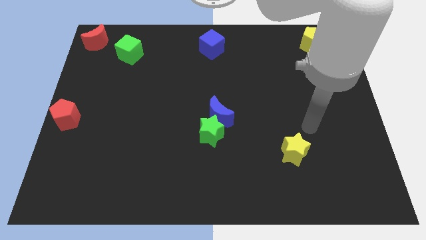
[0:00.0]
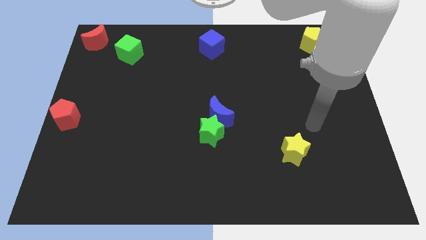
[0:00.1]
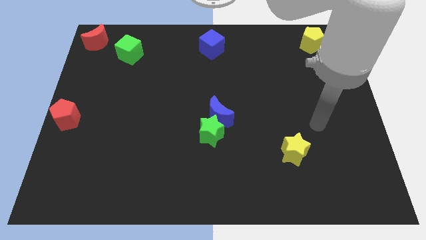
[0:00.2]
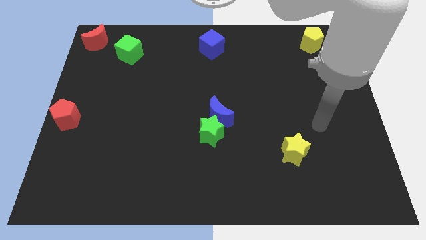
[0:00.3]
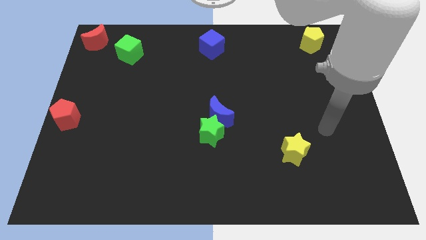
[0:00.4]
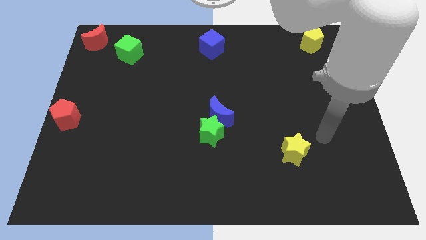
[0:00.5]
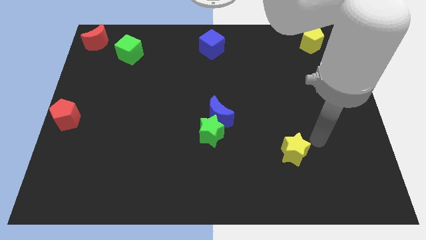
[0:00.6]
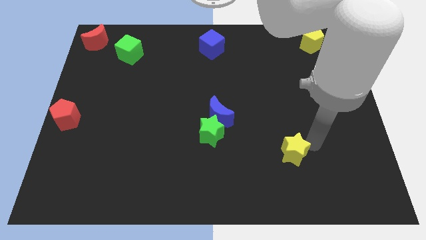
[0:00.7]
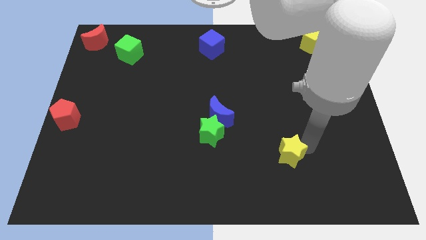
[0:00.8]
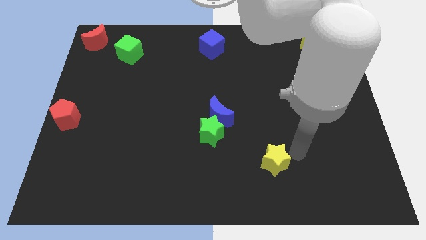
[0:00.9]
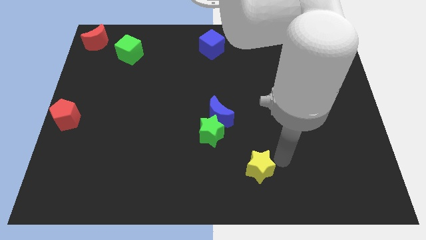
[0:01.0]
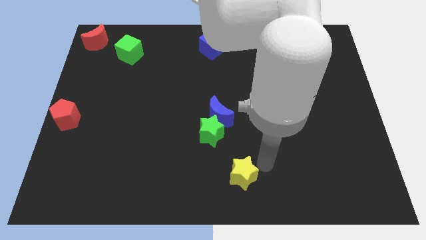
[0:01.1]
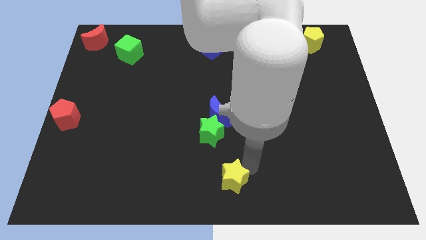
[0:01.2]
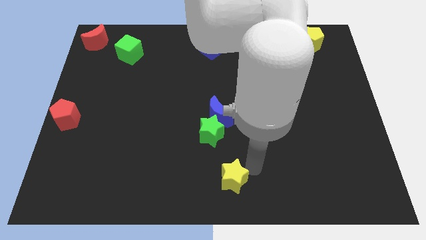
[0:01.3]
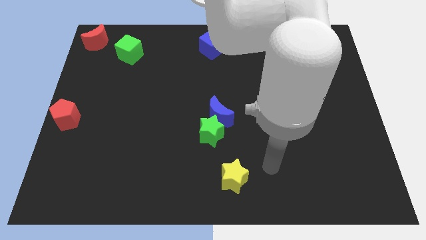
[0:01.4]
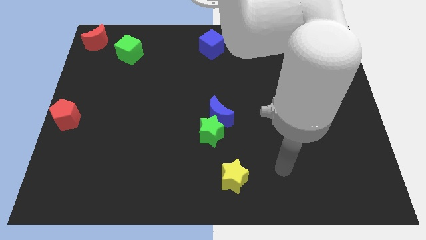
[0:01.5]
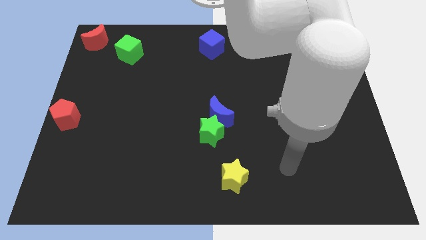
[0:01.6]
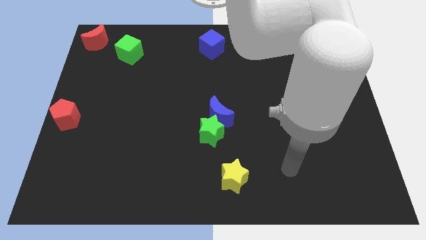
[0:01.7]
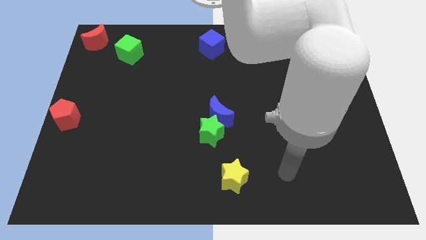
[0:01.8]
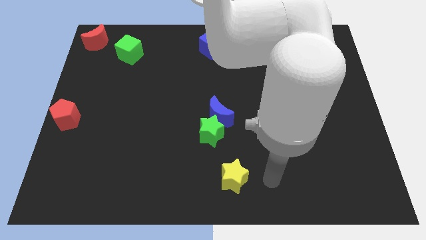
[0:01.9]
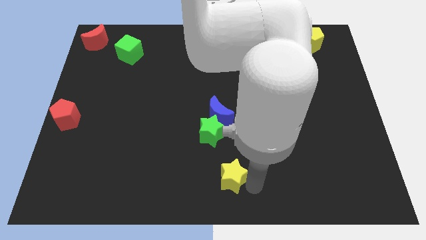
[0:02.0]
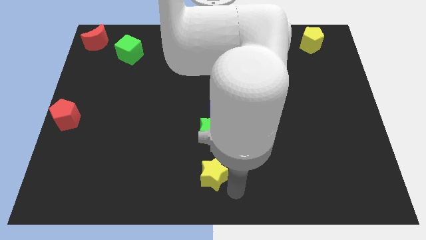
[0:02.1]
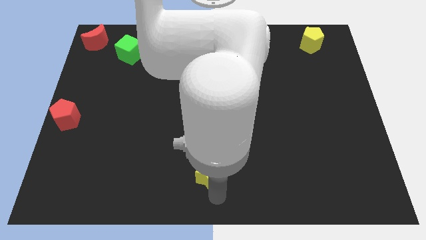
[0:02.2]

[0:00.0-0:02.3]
push the yellow star at the bottom of the green star

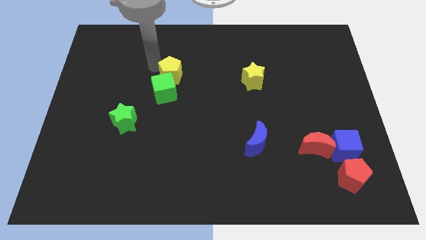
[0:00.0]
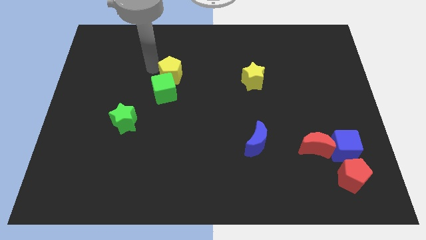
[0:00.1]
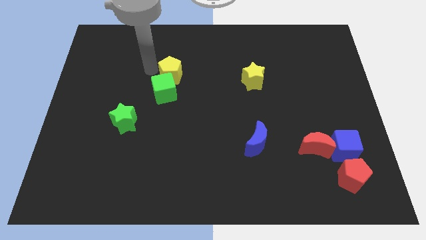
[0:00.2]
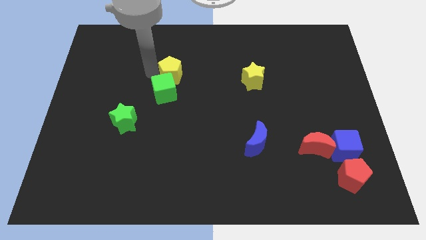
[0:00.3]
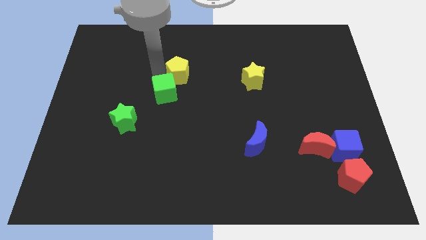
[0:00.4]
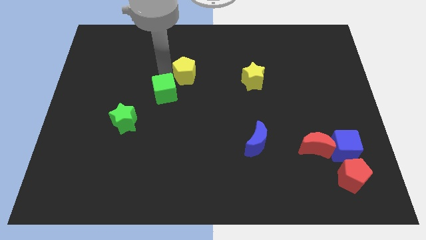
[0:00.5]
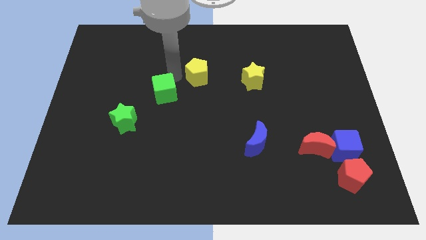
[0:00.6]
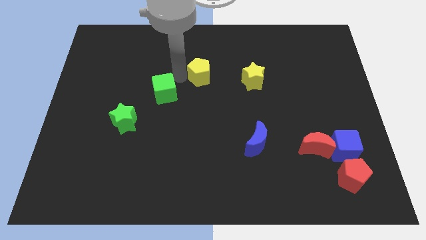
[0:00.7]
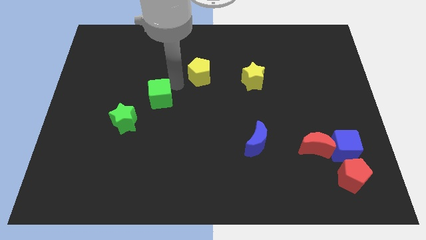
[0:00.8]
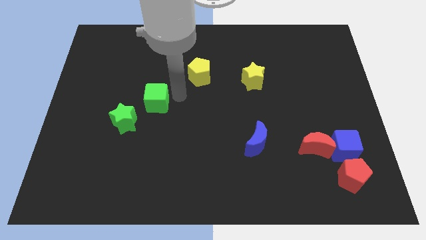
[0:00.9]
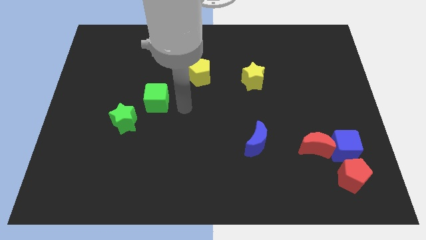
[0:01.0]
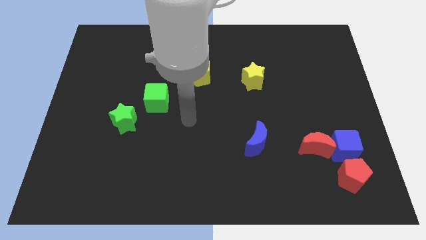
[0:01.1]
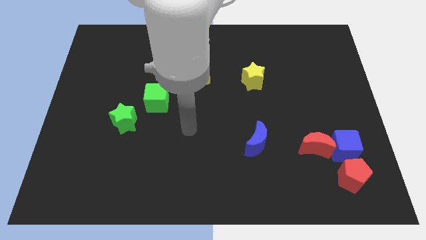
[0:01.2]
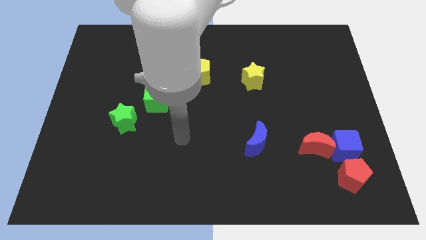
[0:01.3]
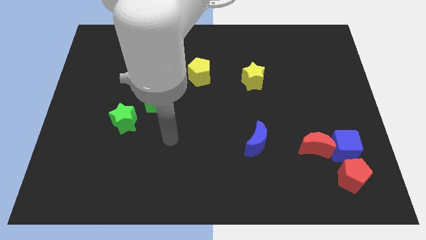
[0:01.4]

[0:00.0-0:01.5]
separate the green cube and yellow pentagon

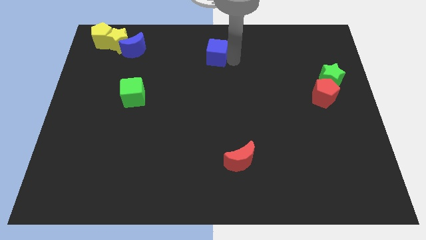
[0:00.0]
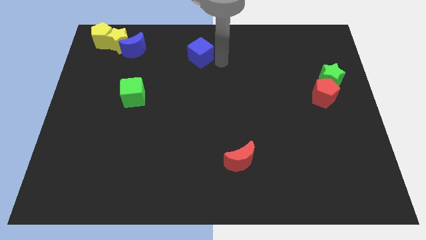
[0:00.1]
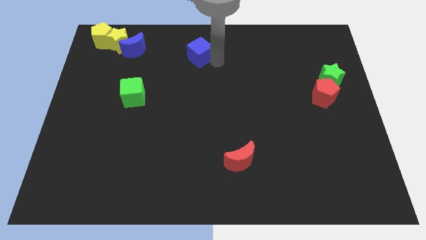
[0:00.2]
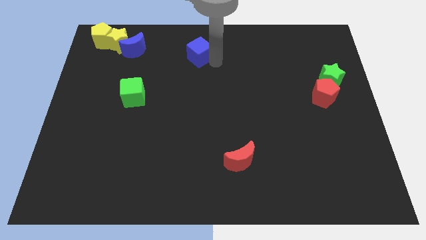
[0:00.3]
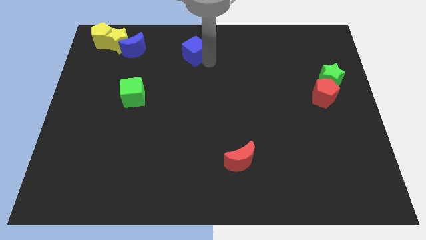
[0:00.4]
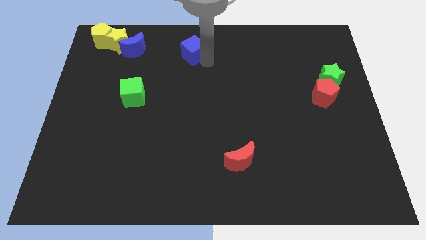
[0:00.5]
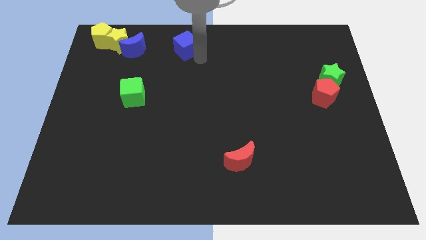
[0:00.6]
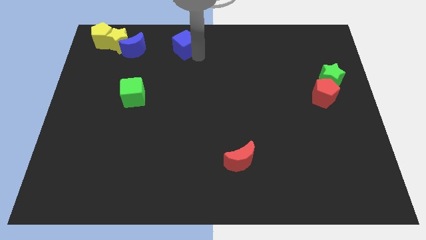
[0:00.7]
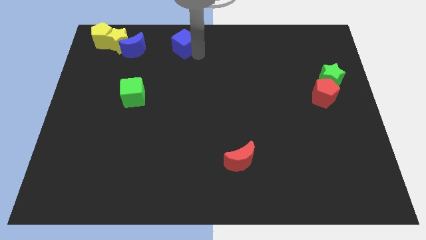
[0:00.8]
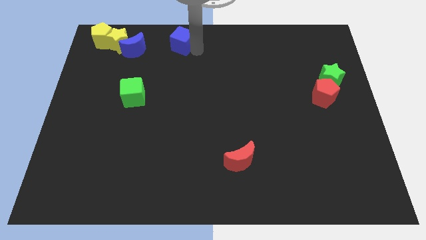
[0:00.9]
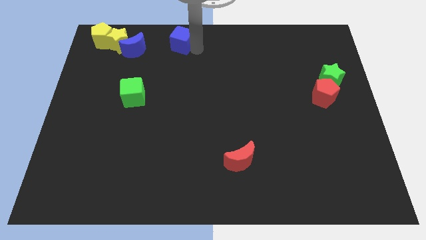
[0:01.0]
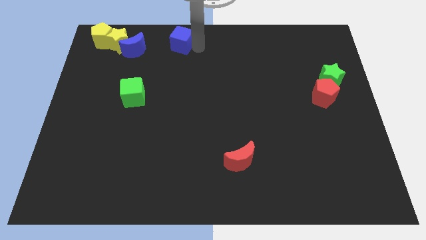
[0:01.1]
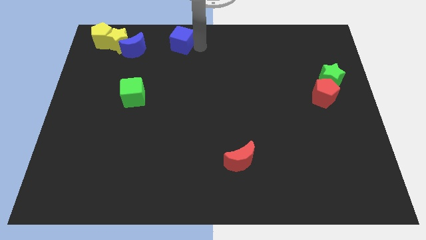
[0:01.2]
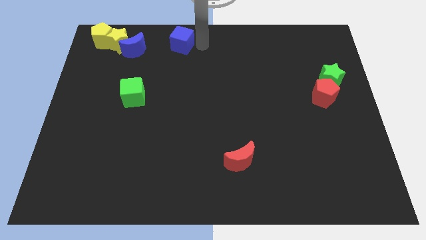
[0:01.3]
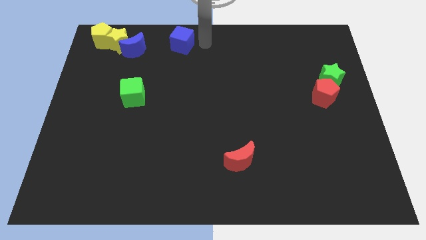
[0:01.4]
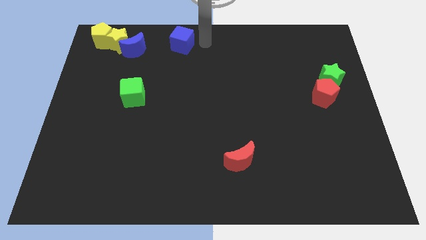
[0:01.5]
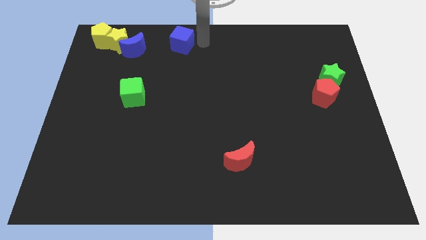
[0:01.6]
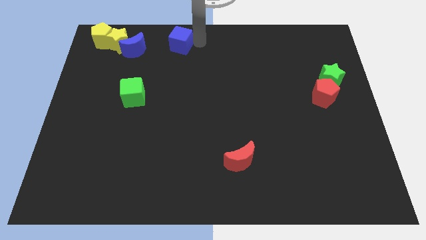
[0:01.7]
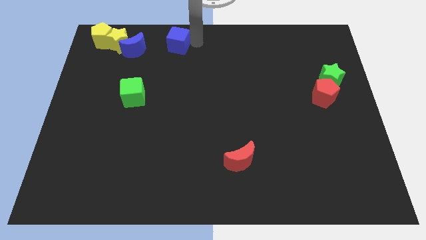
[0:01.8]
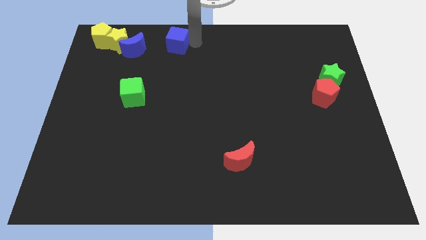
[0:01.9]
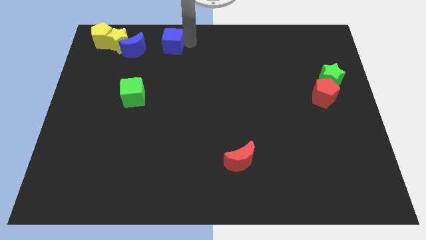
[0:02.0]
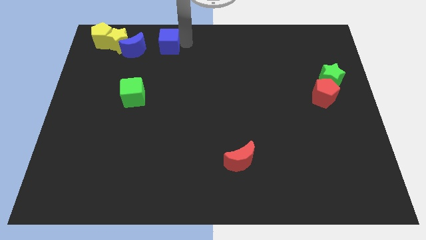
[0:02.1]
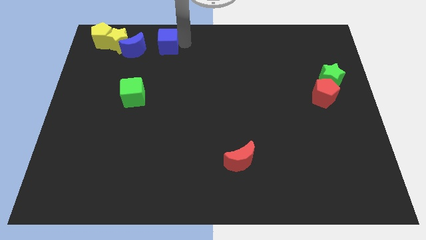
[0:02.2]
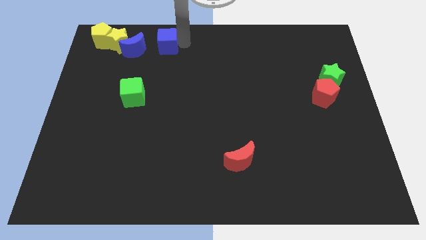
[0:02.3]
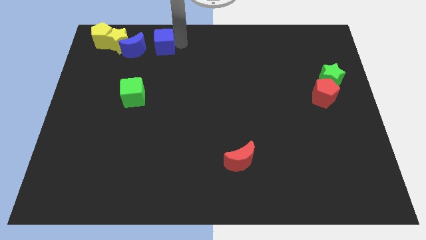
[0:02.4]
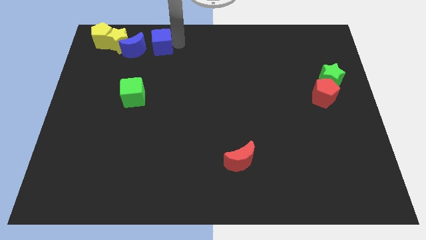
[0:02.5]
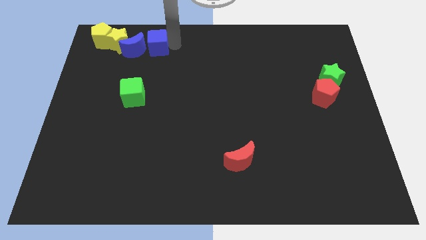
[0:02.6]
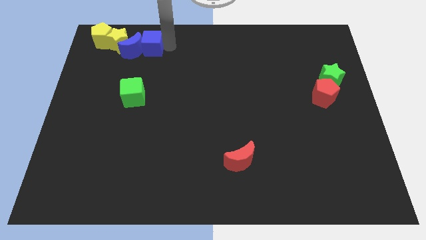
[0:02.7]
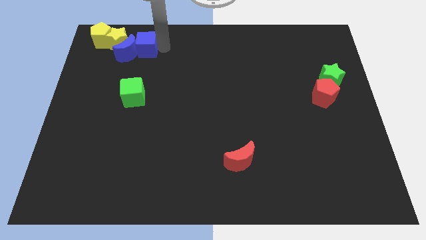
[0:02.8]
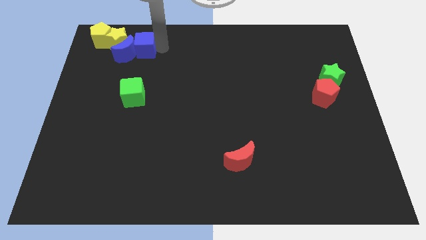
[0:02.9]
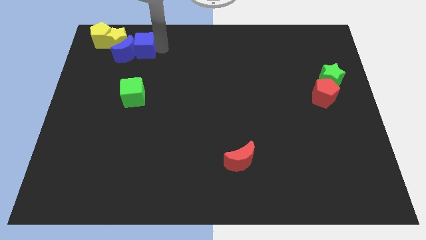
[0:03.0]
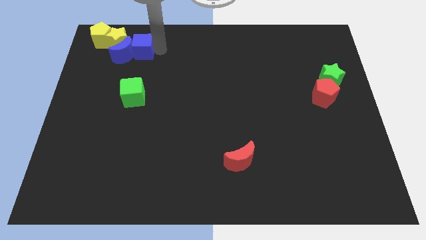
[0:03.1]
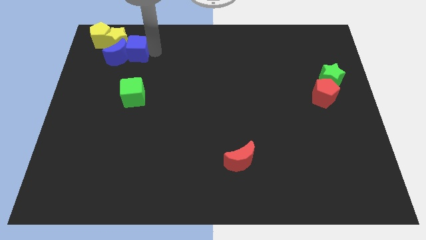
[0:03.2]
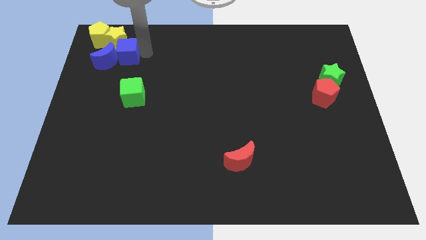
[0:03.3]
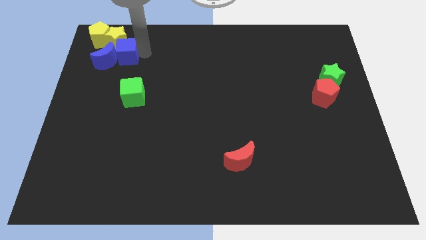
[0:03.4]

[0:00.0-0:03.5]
place blue cube below yellow star

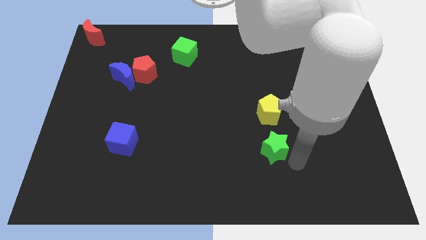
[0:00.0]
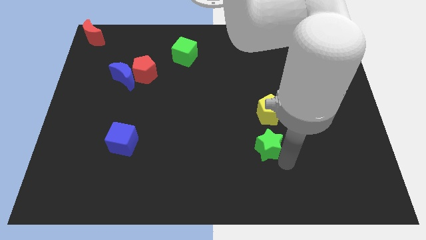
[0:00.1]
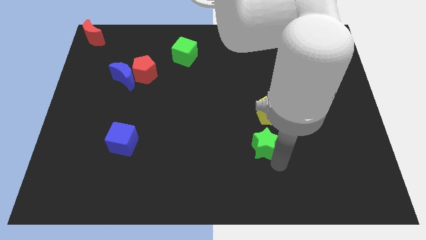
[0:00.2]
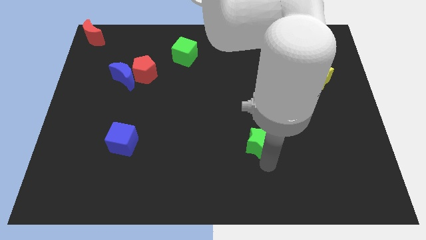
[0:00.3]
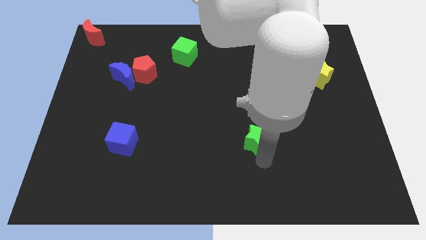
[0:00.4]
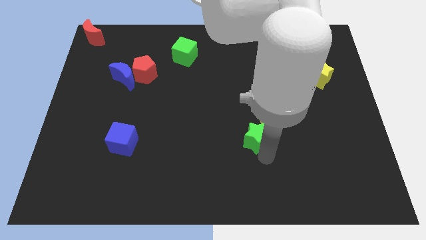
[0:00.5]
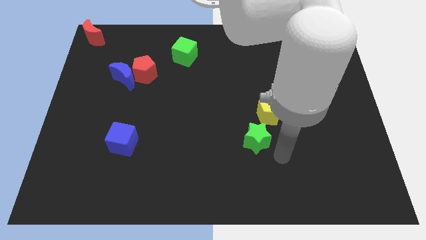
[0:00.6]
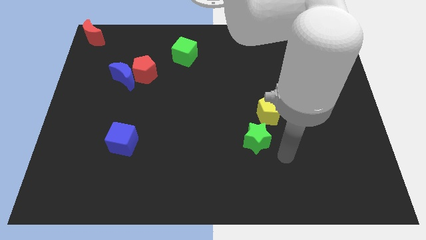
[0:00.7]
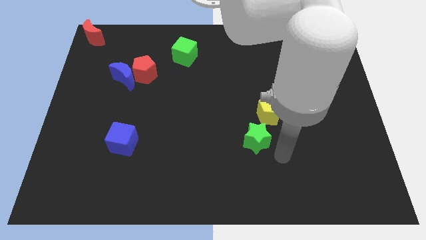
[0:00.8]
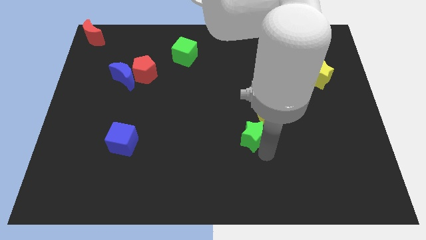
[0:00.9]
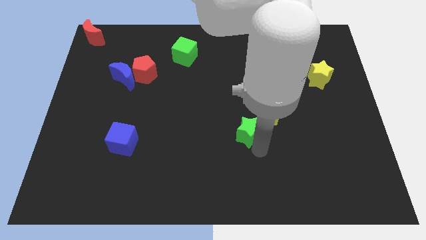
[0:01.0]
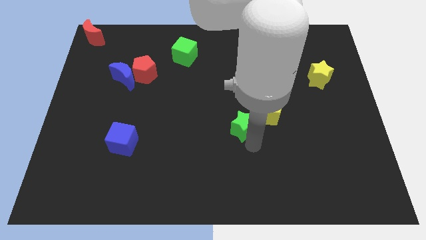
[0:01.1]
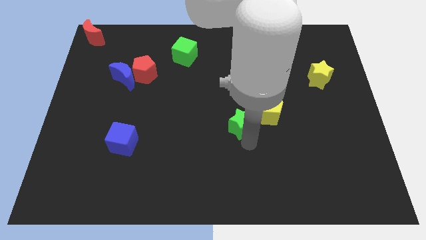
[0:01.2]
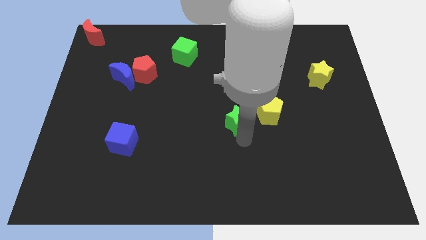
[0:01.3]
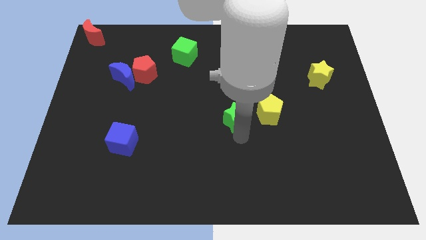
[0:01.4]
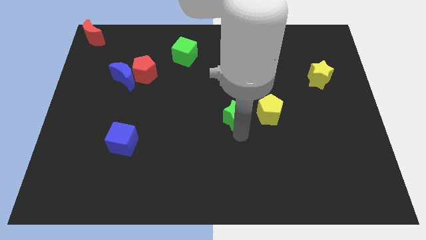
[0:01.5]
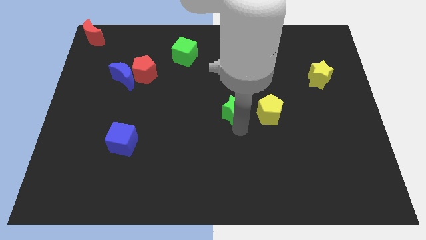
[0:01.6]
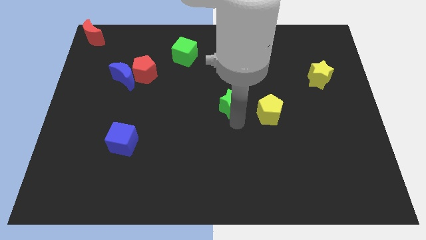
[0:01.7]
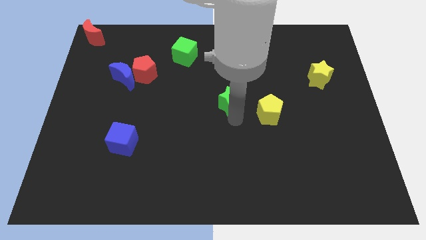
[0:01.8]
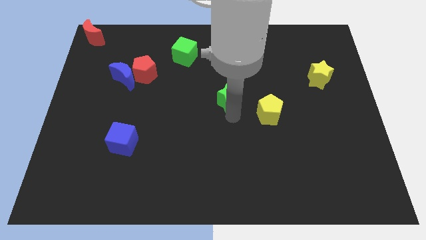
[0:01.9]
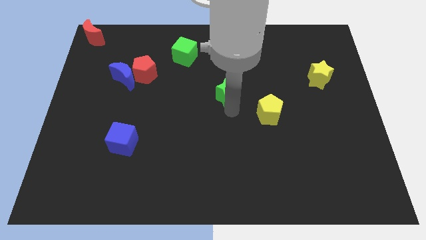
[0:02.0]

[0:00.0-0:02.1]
drag green star towards the top
